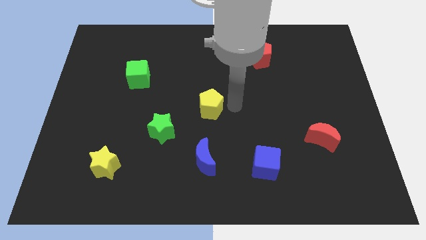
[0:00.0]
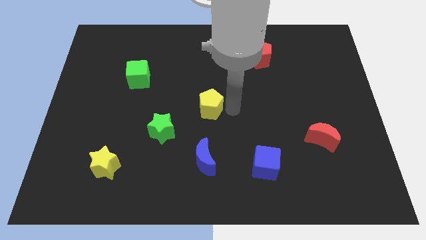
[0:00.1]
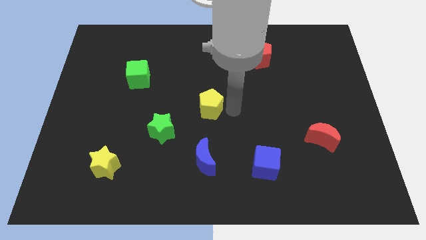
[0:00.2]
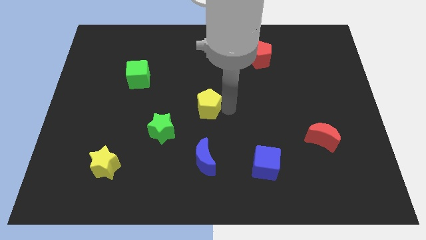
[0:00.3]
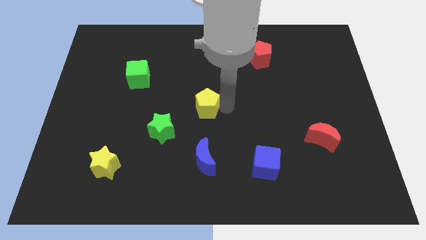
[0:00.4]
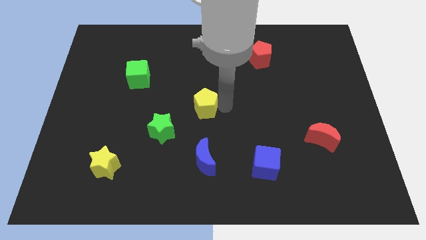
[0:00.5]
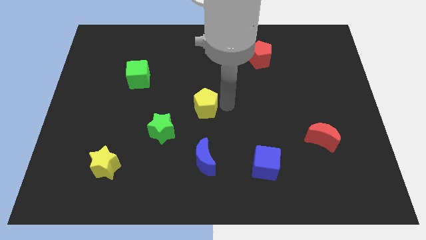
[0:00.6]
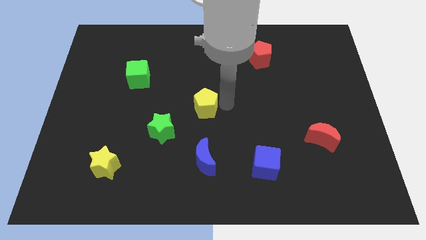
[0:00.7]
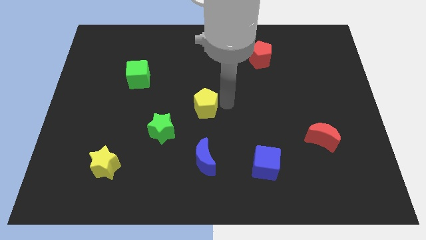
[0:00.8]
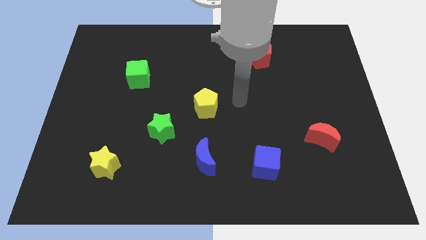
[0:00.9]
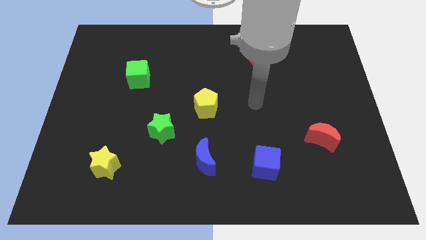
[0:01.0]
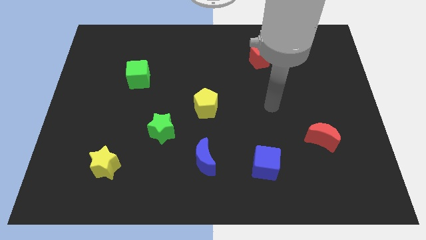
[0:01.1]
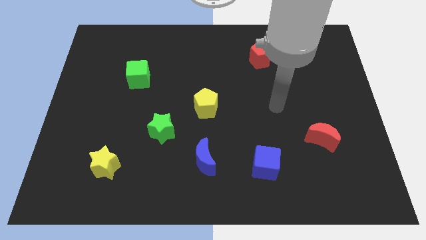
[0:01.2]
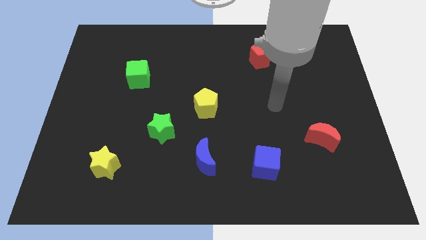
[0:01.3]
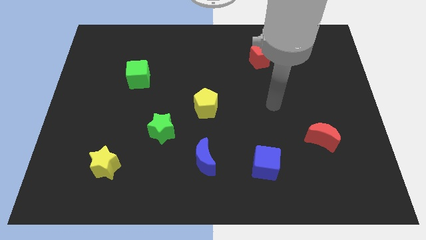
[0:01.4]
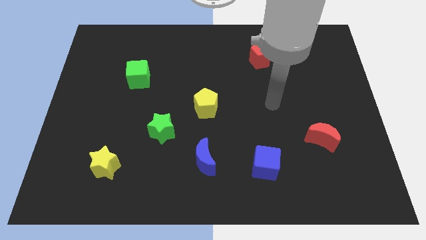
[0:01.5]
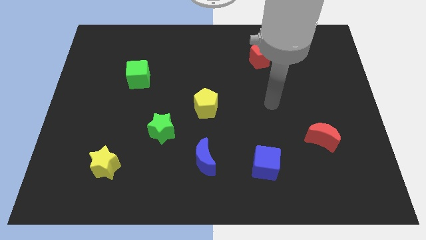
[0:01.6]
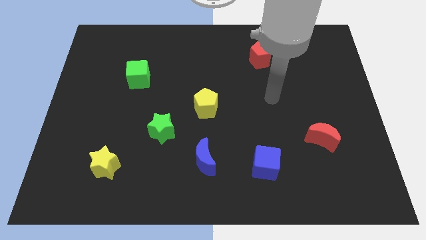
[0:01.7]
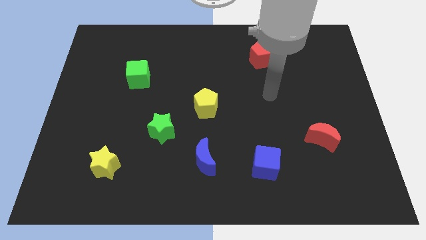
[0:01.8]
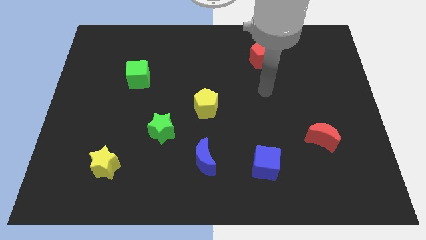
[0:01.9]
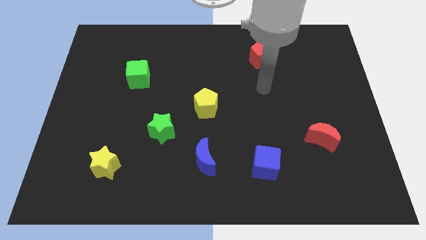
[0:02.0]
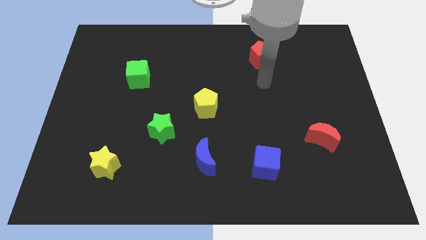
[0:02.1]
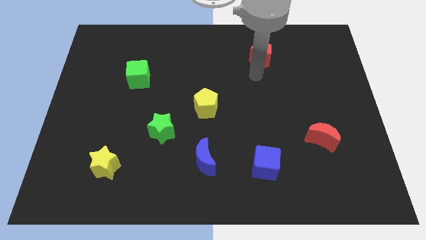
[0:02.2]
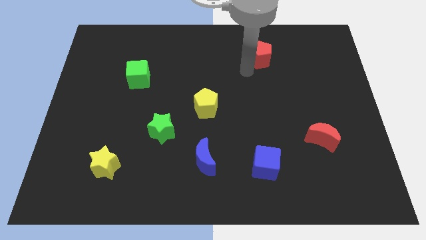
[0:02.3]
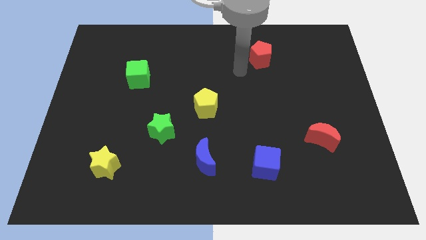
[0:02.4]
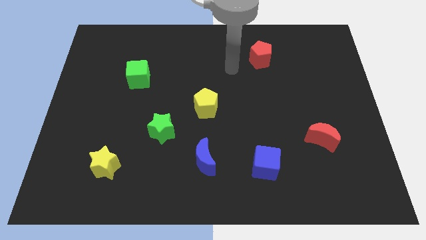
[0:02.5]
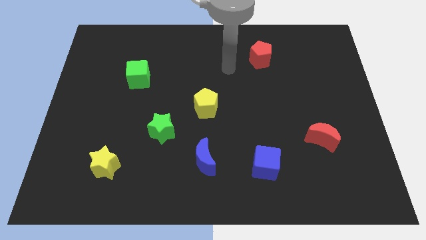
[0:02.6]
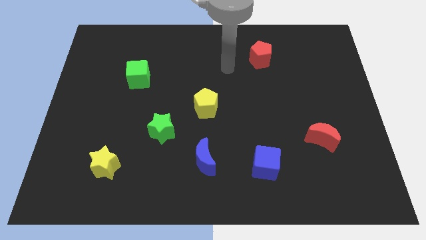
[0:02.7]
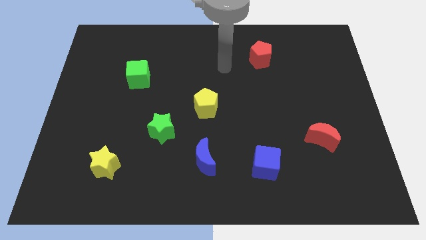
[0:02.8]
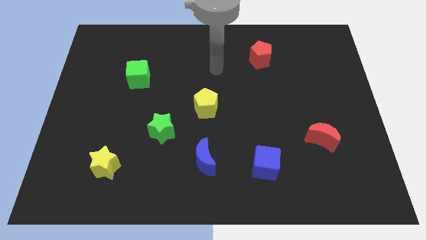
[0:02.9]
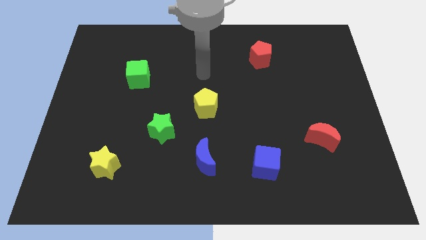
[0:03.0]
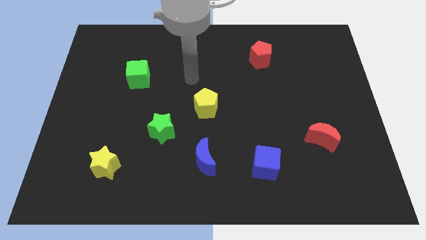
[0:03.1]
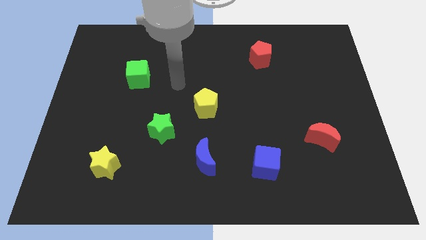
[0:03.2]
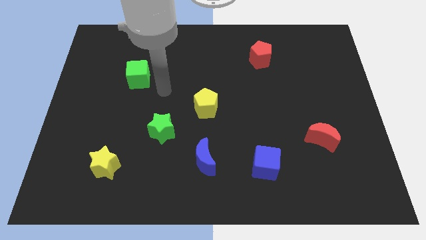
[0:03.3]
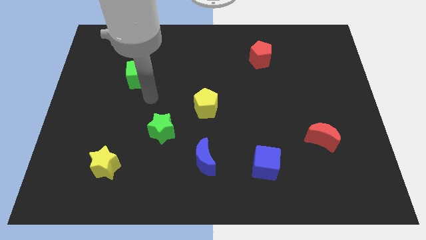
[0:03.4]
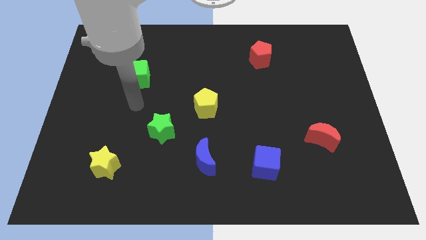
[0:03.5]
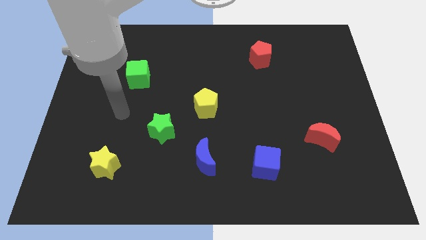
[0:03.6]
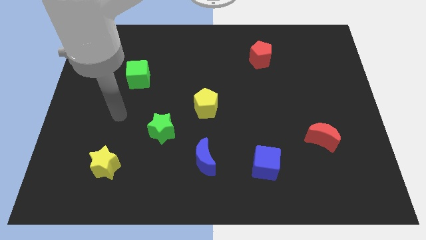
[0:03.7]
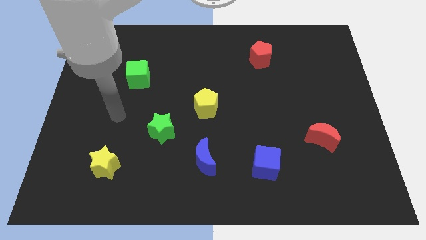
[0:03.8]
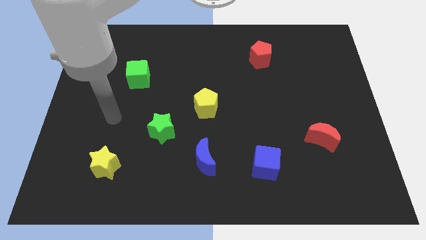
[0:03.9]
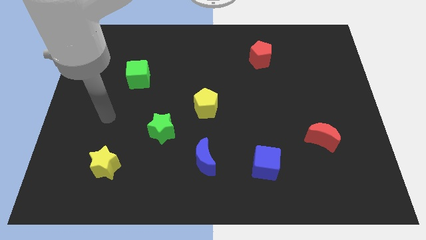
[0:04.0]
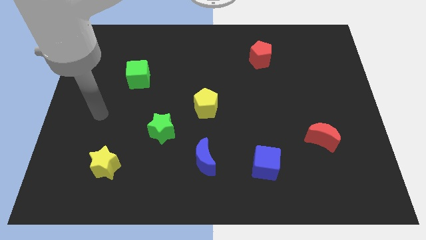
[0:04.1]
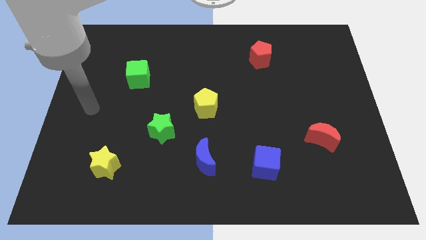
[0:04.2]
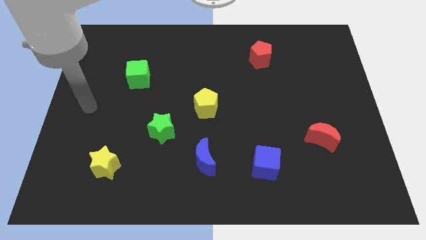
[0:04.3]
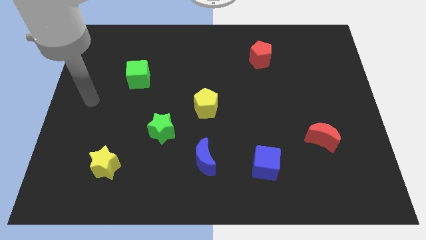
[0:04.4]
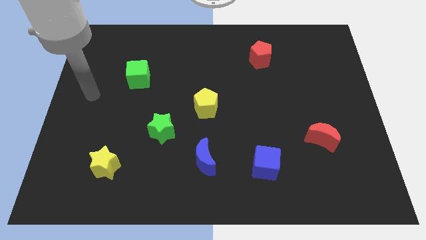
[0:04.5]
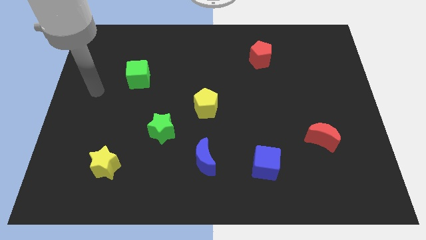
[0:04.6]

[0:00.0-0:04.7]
slide the yellow pentagon towards the left side of the board

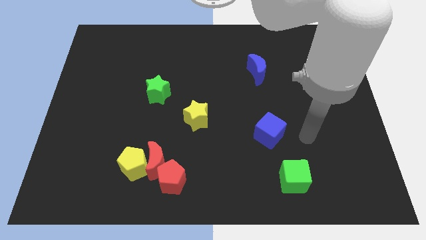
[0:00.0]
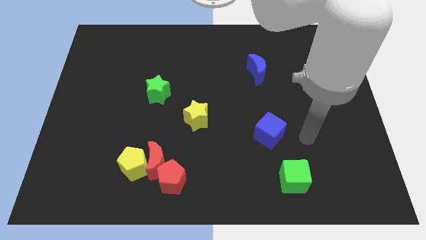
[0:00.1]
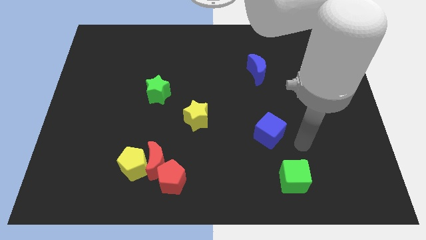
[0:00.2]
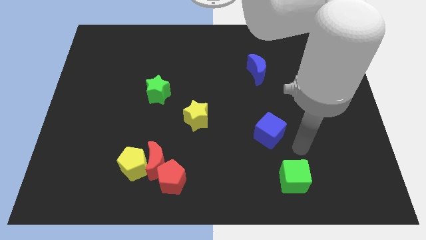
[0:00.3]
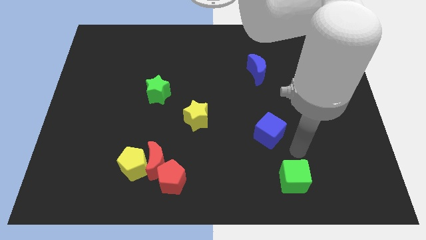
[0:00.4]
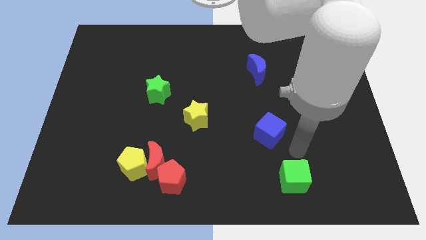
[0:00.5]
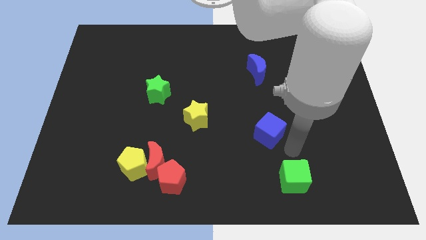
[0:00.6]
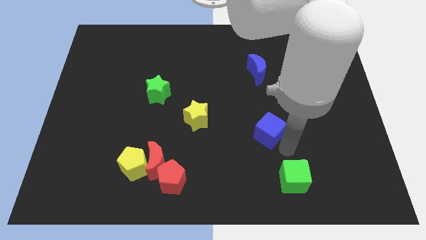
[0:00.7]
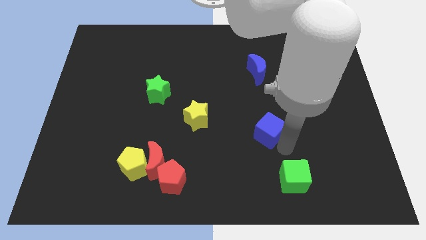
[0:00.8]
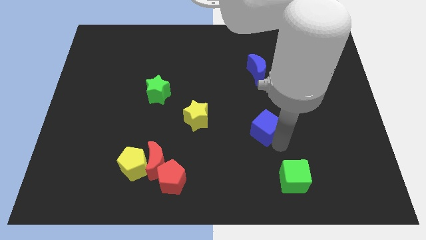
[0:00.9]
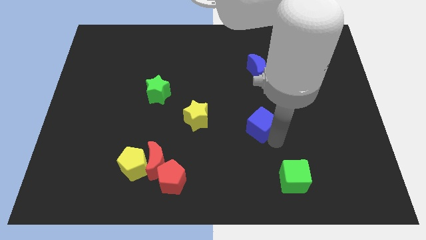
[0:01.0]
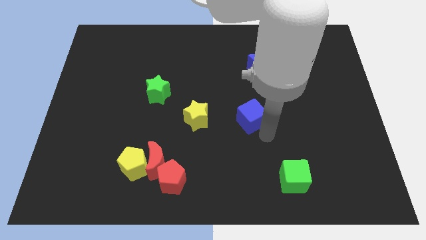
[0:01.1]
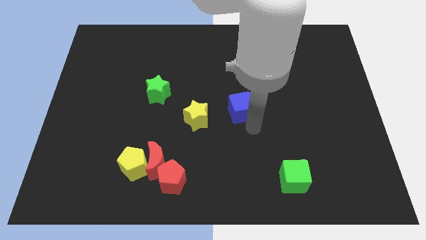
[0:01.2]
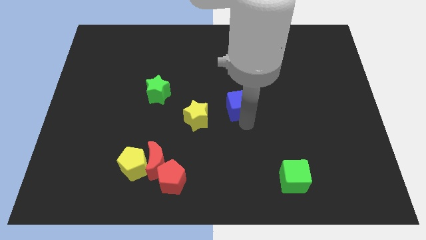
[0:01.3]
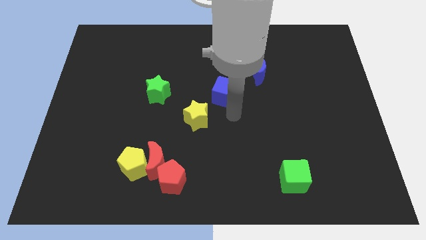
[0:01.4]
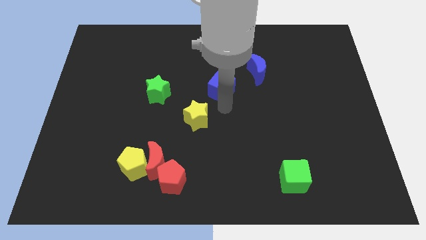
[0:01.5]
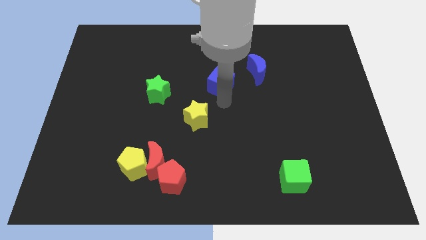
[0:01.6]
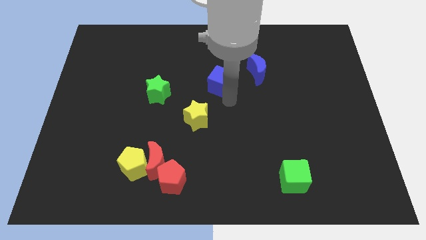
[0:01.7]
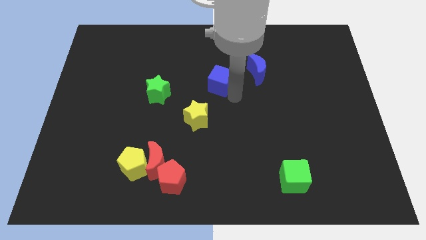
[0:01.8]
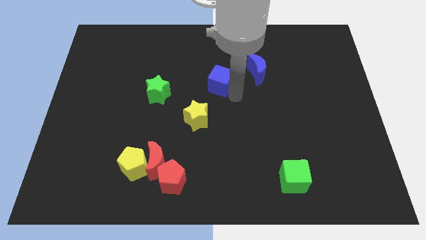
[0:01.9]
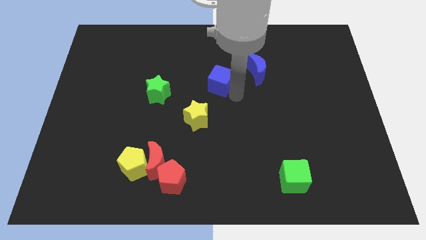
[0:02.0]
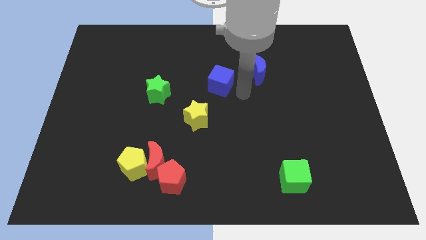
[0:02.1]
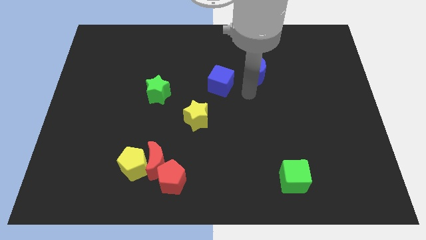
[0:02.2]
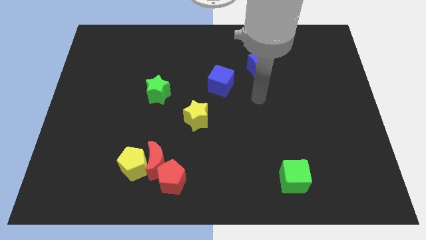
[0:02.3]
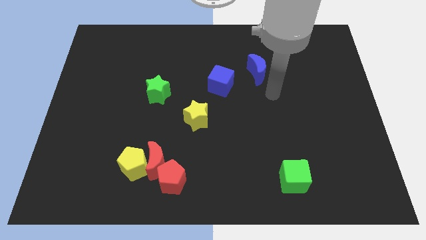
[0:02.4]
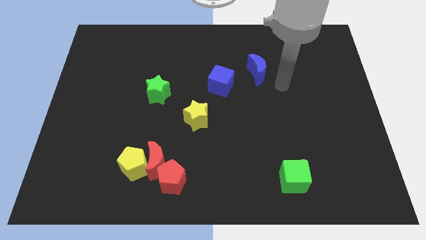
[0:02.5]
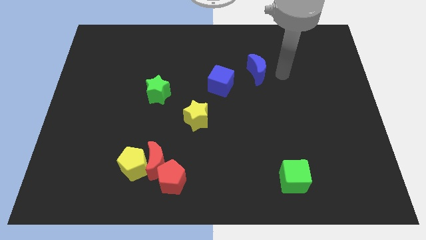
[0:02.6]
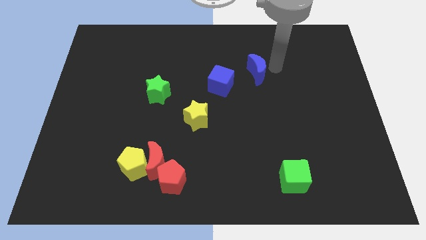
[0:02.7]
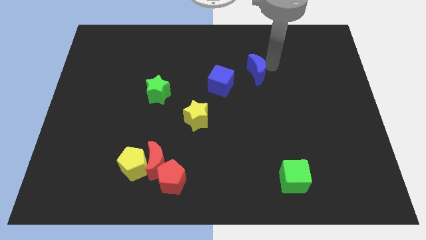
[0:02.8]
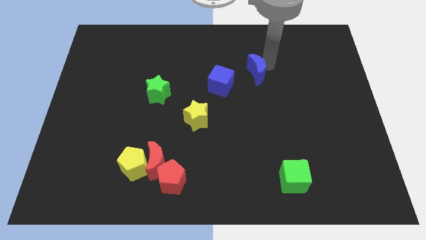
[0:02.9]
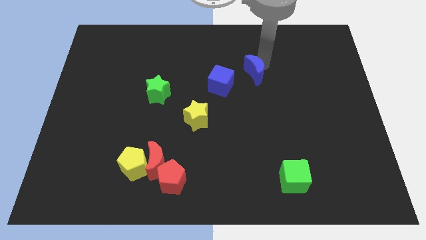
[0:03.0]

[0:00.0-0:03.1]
slide the blue cube diagonally top right to the yellow star

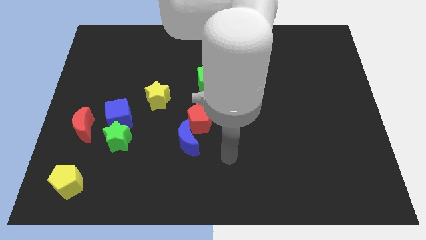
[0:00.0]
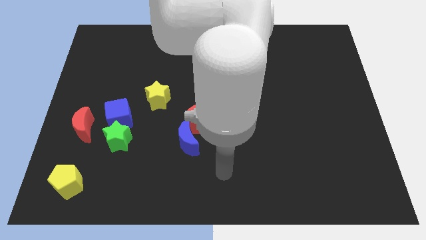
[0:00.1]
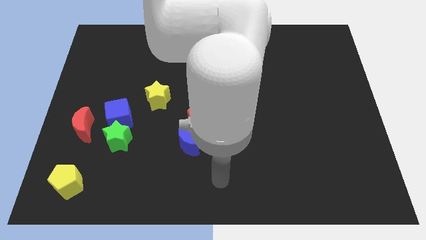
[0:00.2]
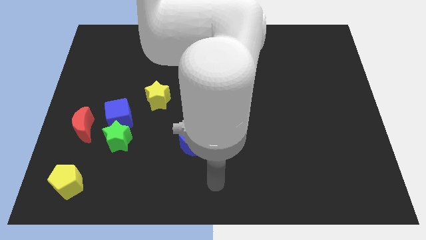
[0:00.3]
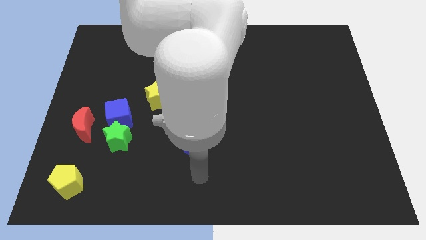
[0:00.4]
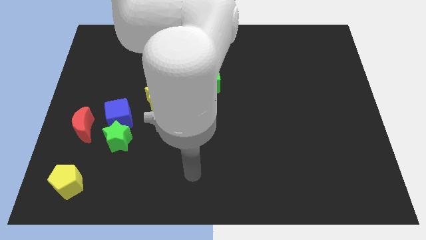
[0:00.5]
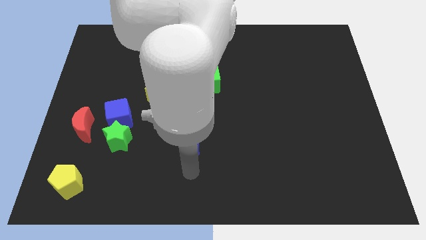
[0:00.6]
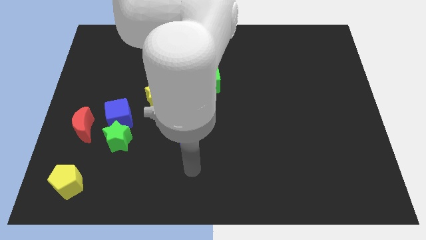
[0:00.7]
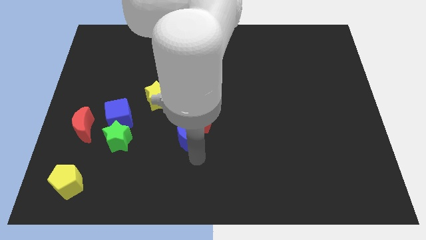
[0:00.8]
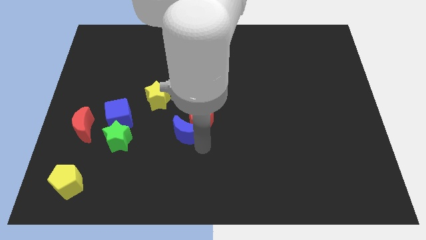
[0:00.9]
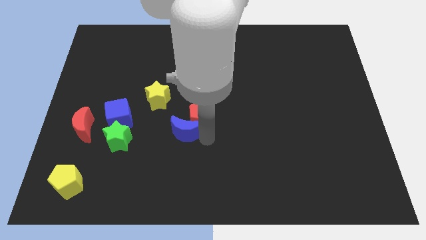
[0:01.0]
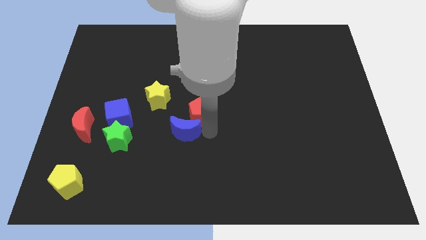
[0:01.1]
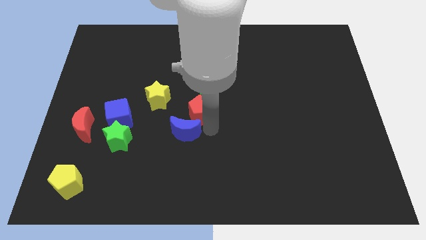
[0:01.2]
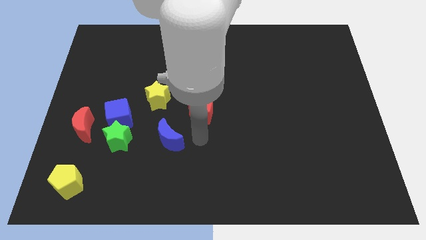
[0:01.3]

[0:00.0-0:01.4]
move the blue crescent along with red pentagon
